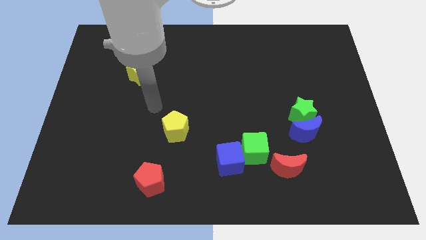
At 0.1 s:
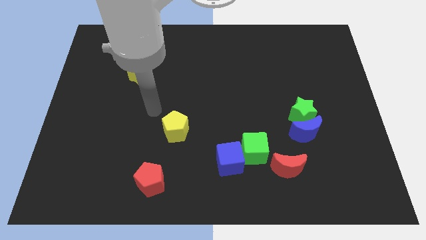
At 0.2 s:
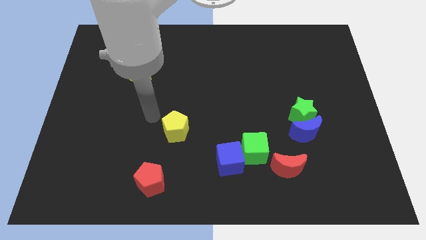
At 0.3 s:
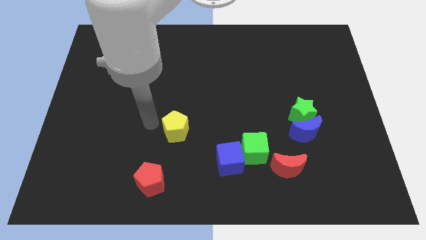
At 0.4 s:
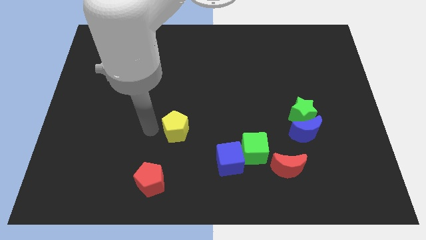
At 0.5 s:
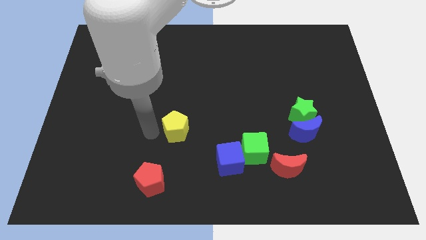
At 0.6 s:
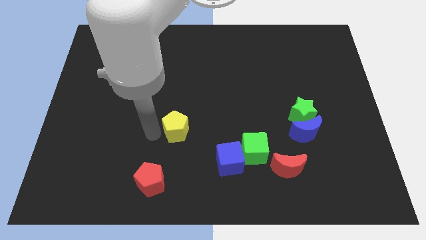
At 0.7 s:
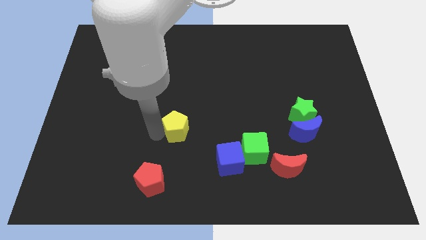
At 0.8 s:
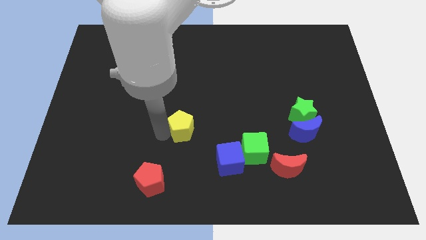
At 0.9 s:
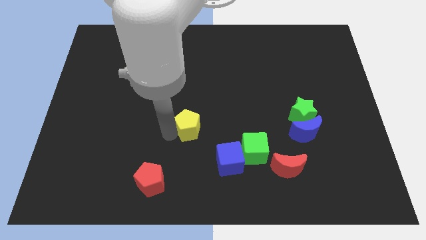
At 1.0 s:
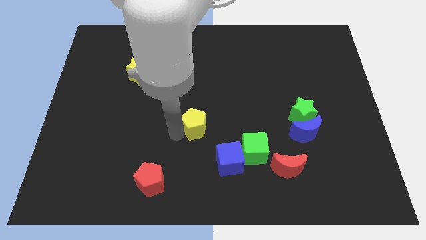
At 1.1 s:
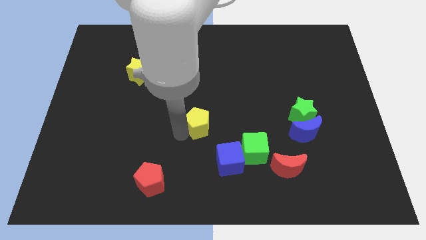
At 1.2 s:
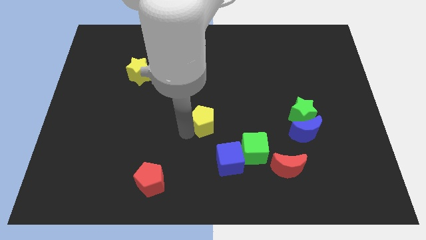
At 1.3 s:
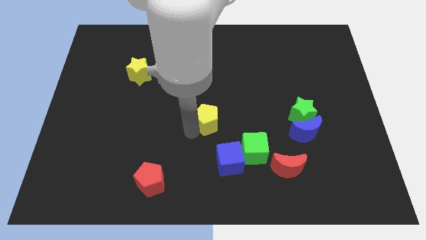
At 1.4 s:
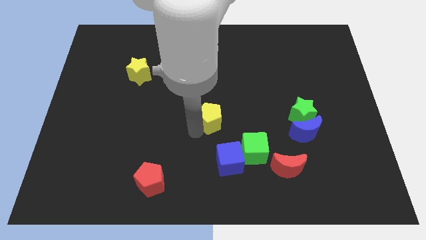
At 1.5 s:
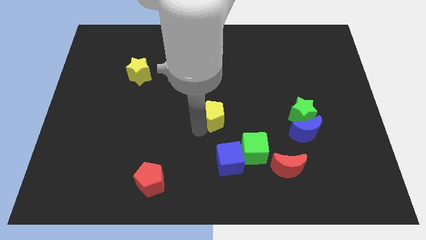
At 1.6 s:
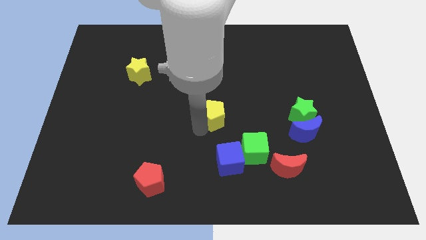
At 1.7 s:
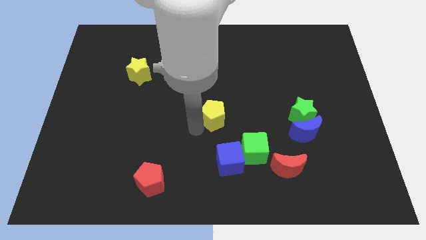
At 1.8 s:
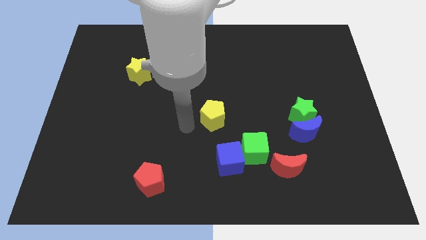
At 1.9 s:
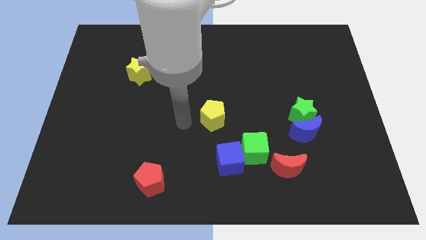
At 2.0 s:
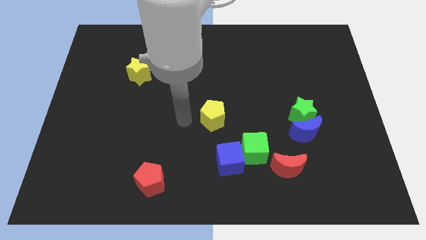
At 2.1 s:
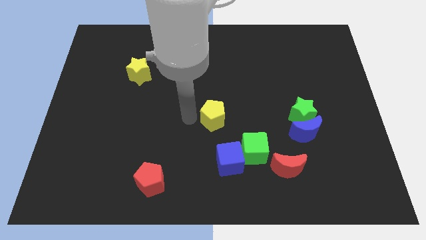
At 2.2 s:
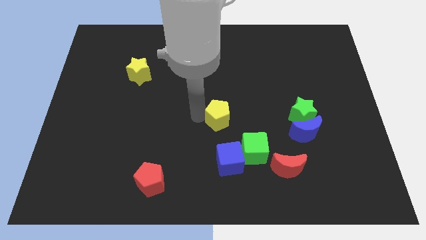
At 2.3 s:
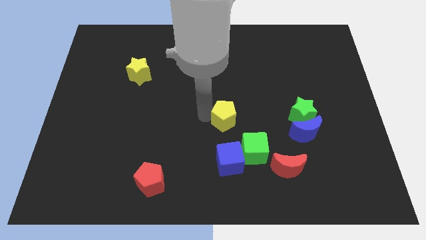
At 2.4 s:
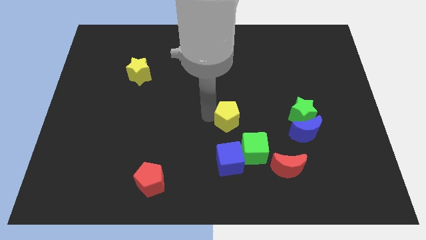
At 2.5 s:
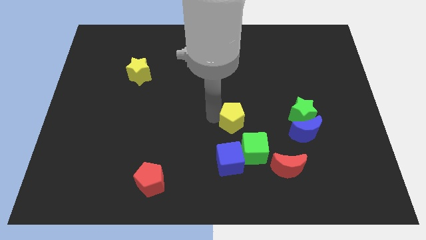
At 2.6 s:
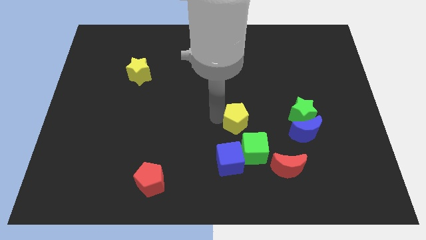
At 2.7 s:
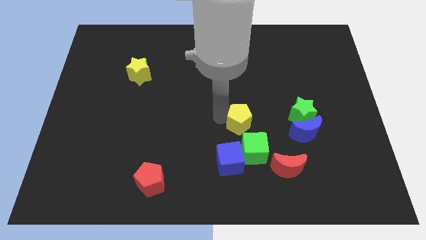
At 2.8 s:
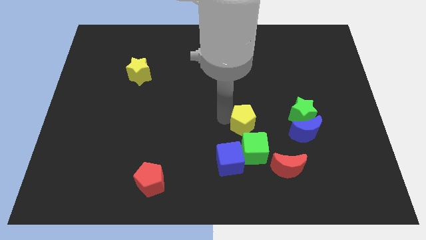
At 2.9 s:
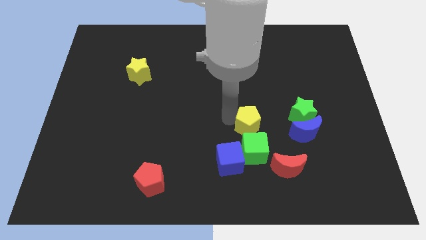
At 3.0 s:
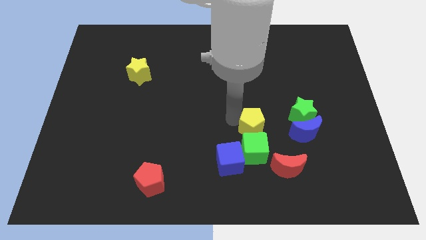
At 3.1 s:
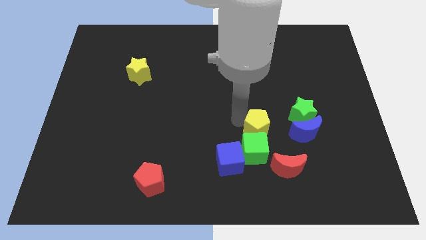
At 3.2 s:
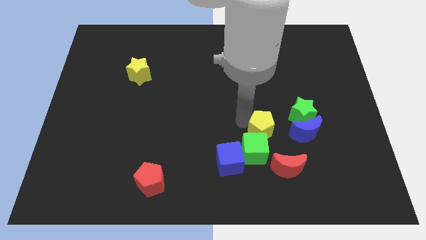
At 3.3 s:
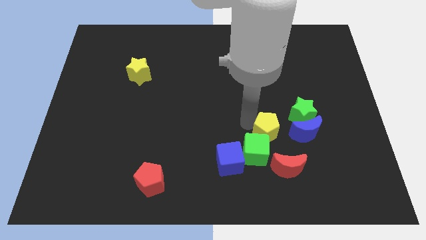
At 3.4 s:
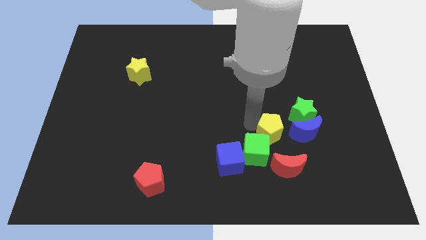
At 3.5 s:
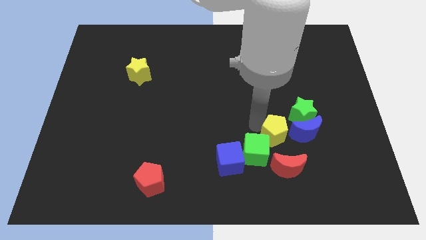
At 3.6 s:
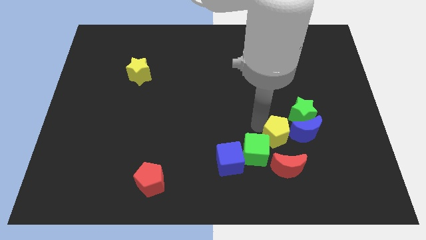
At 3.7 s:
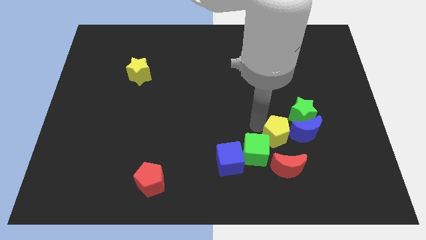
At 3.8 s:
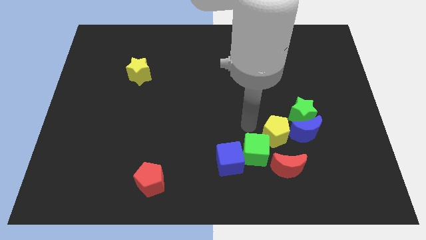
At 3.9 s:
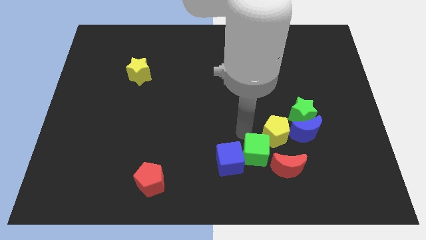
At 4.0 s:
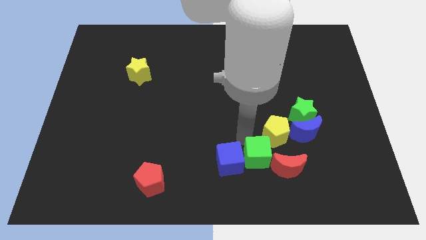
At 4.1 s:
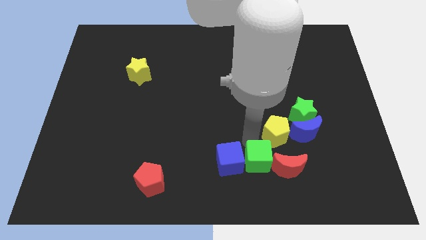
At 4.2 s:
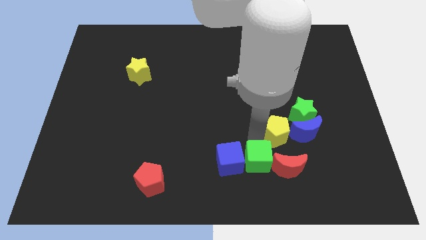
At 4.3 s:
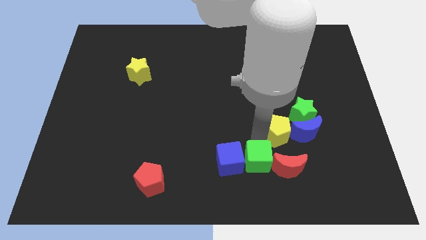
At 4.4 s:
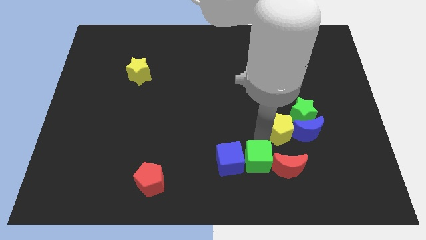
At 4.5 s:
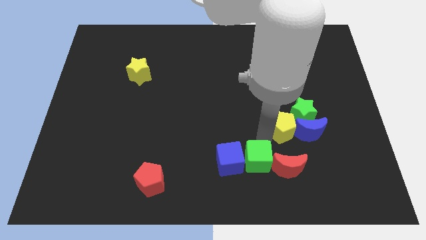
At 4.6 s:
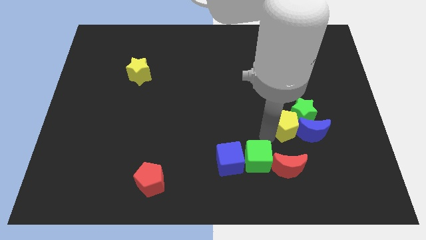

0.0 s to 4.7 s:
move the yellow pentagon to the blue moon

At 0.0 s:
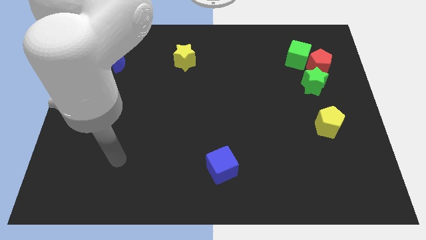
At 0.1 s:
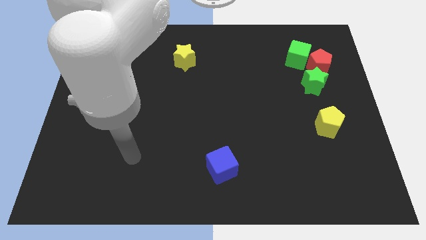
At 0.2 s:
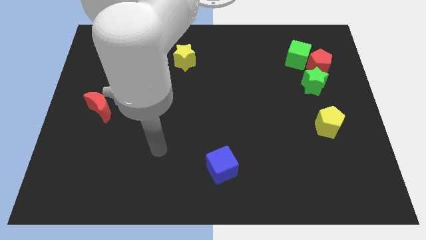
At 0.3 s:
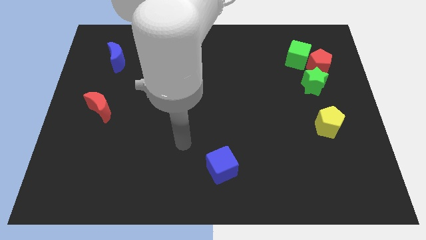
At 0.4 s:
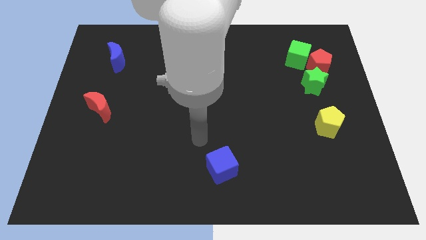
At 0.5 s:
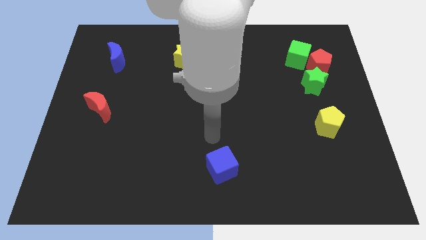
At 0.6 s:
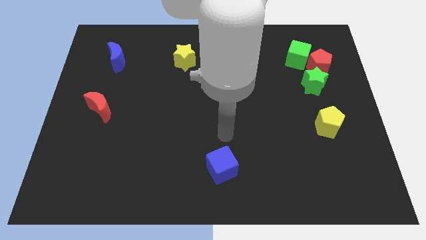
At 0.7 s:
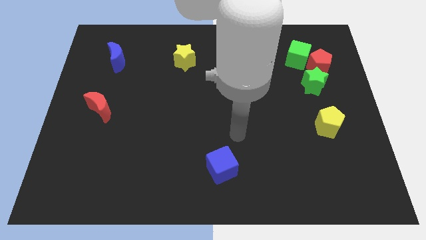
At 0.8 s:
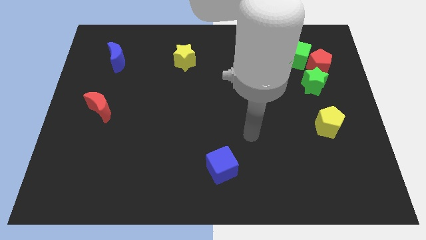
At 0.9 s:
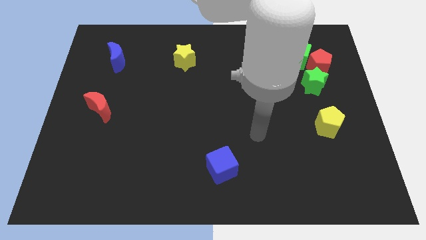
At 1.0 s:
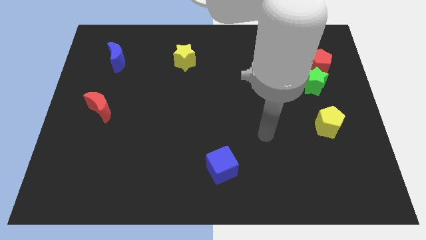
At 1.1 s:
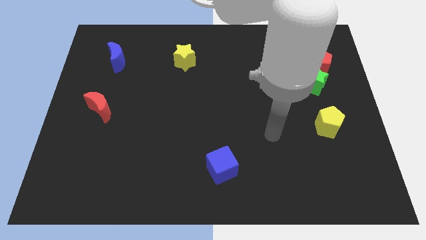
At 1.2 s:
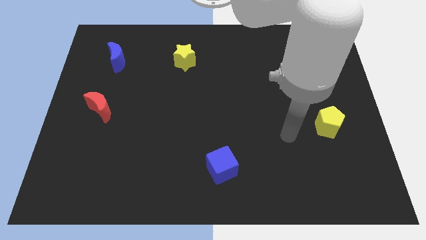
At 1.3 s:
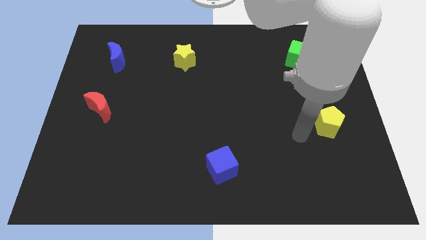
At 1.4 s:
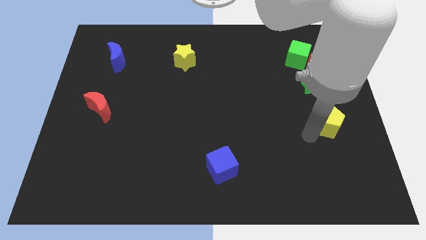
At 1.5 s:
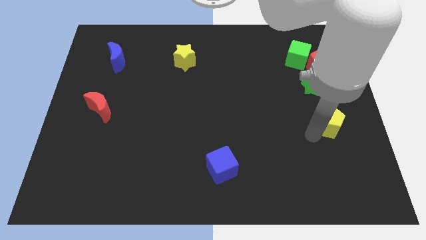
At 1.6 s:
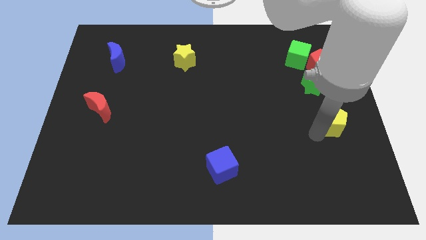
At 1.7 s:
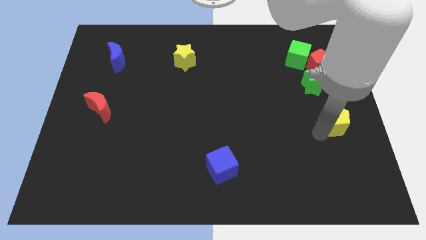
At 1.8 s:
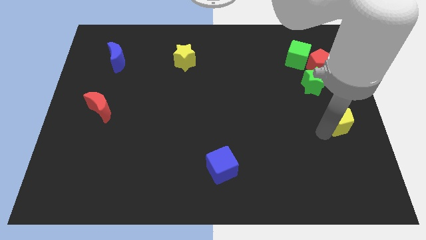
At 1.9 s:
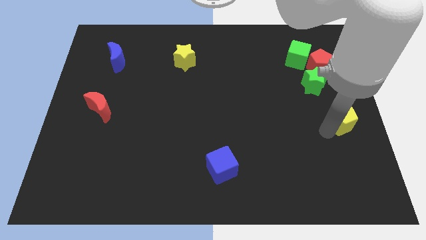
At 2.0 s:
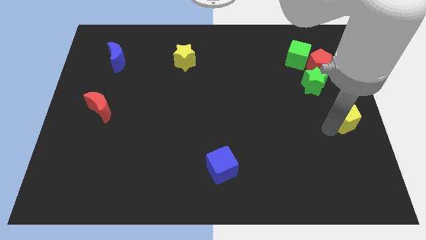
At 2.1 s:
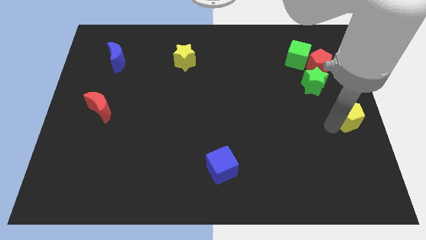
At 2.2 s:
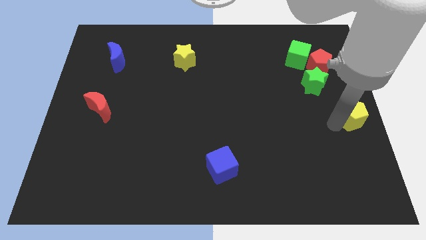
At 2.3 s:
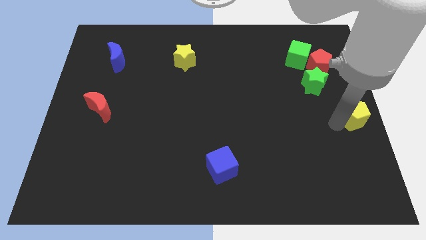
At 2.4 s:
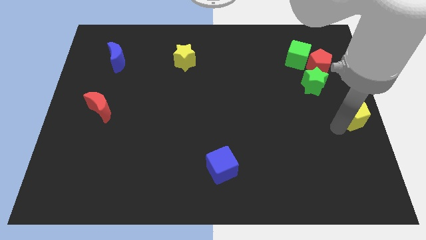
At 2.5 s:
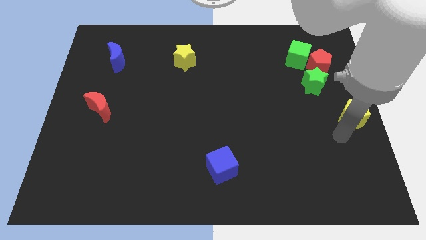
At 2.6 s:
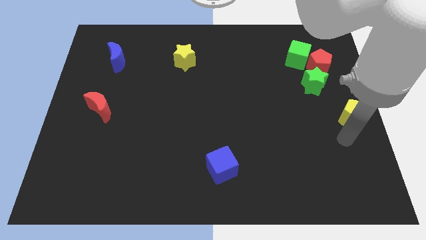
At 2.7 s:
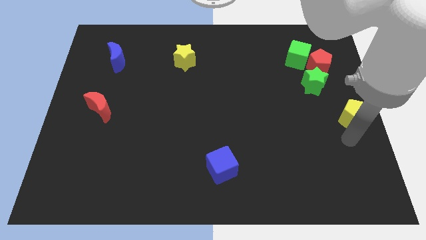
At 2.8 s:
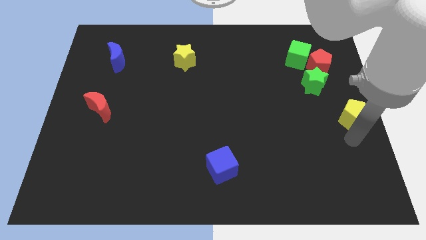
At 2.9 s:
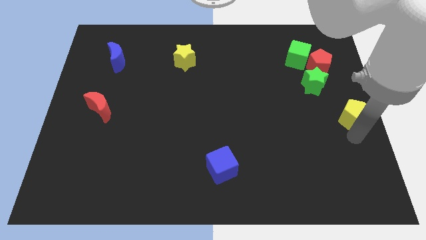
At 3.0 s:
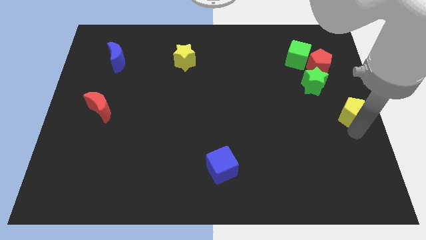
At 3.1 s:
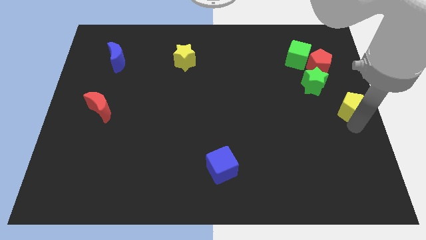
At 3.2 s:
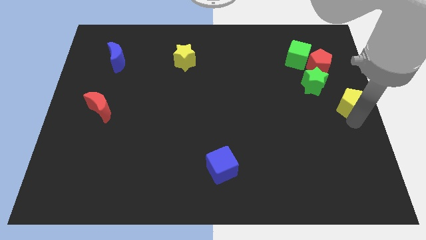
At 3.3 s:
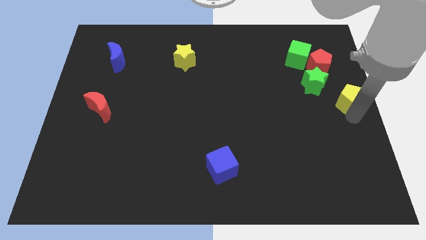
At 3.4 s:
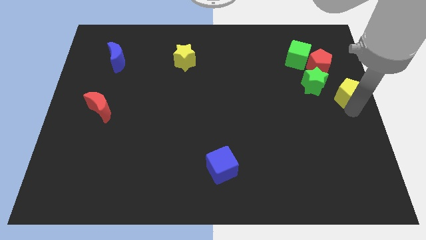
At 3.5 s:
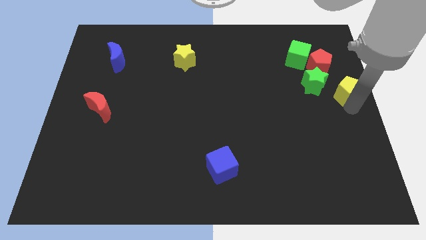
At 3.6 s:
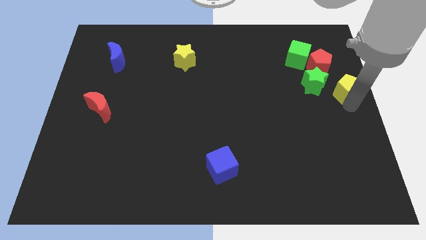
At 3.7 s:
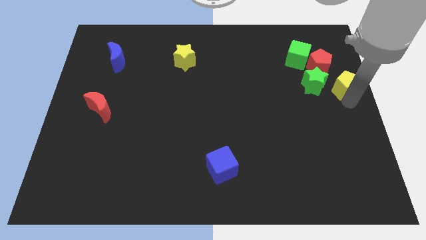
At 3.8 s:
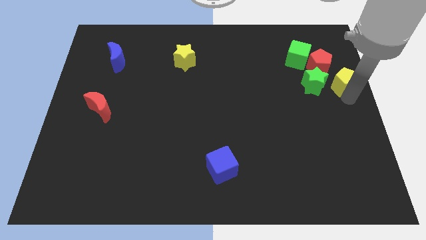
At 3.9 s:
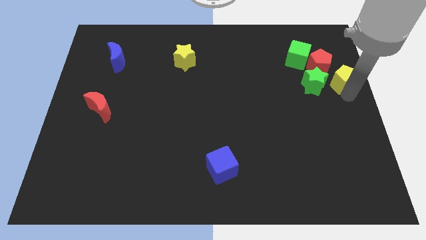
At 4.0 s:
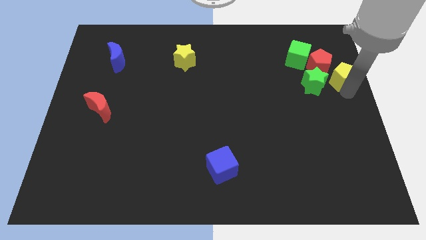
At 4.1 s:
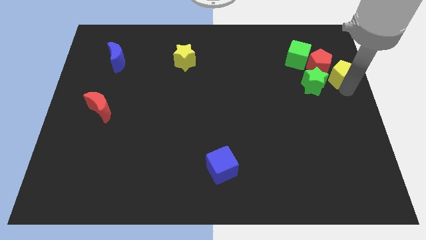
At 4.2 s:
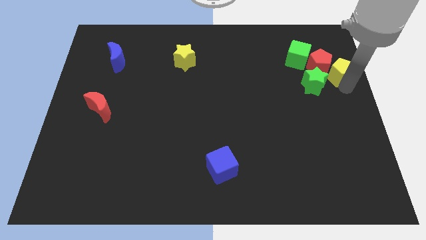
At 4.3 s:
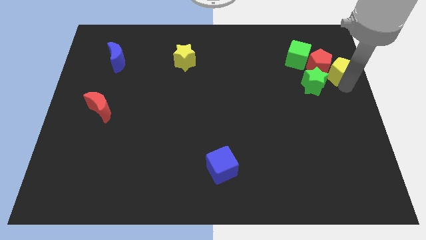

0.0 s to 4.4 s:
push the yellow pentagon close to the red pentagon
